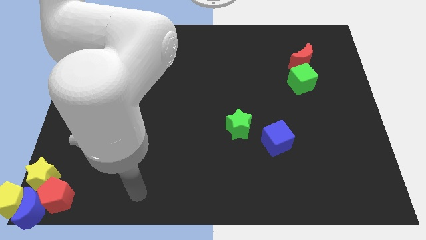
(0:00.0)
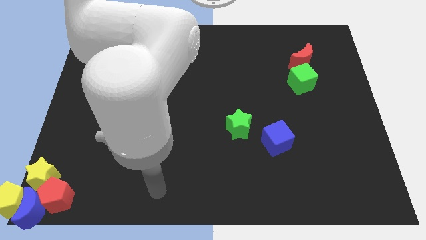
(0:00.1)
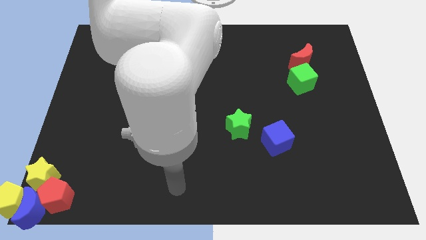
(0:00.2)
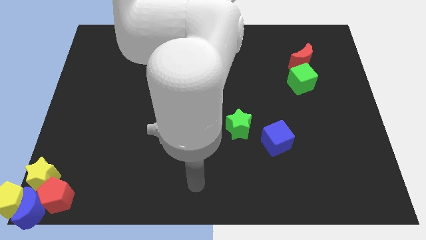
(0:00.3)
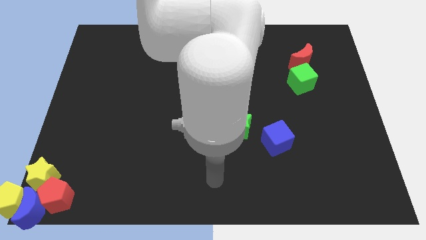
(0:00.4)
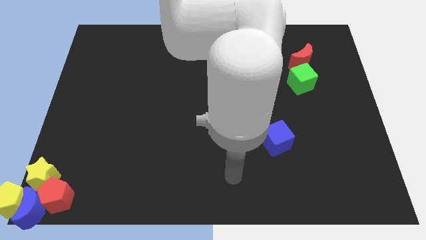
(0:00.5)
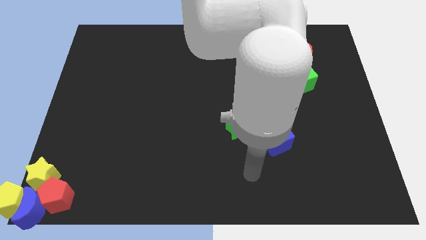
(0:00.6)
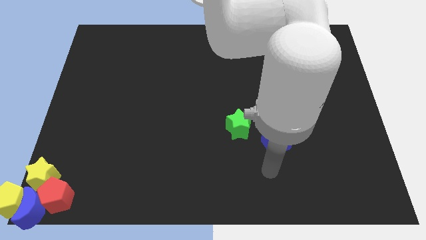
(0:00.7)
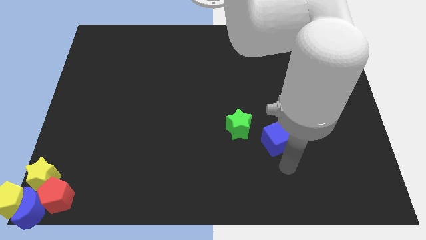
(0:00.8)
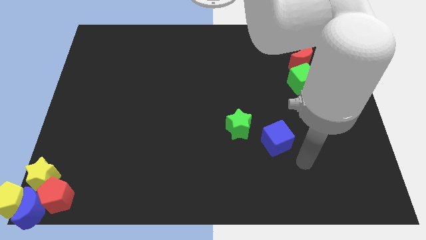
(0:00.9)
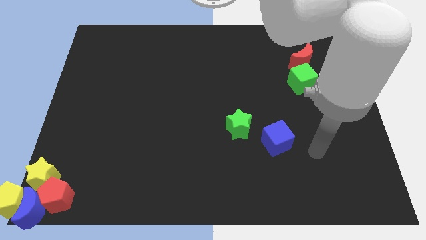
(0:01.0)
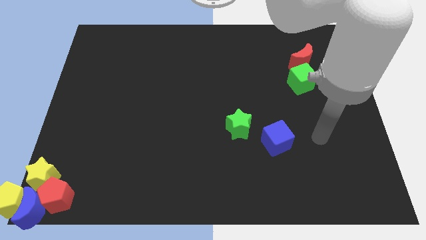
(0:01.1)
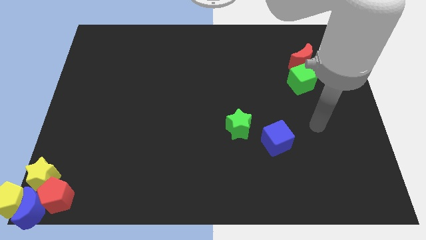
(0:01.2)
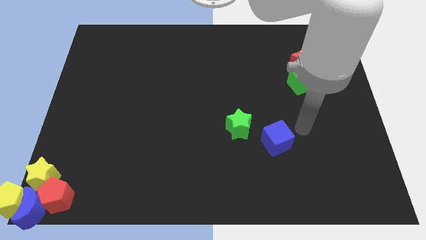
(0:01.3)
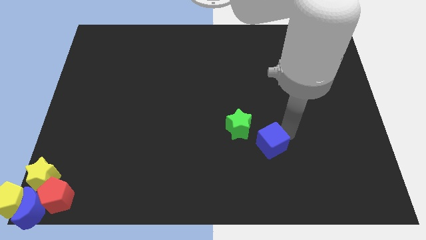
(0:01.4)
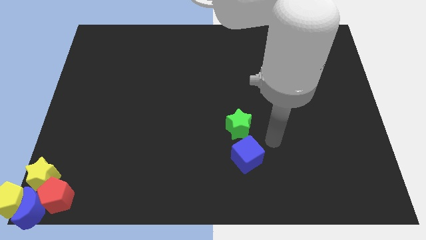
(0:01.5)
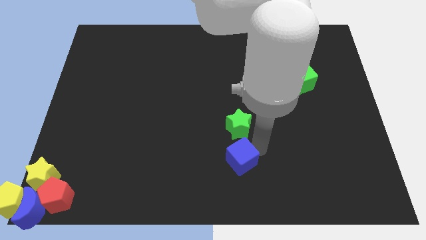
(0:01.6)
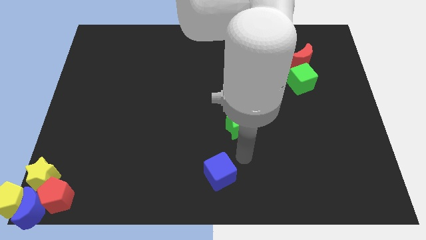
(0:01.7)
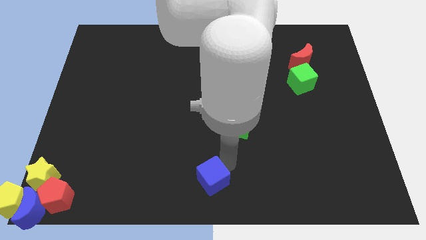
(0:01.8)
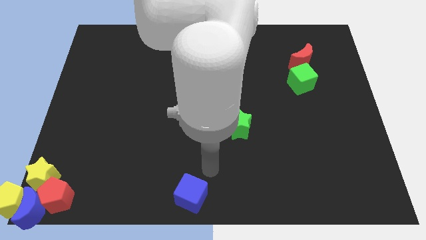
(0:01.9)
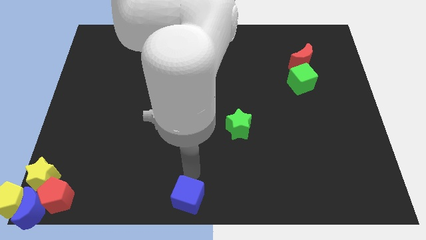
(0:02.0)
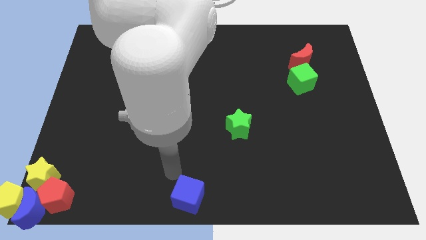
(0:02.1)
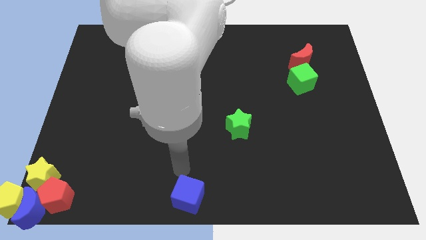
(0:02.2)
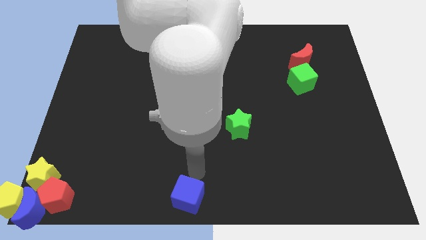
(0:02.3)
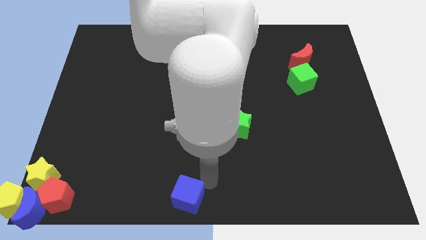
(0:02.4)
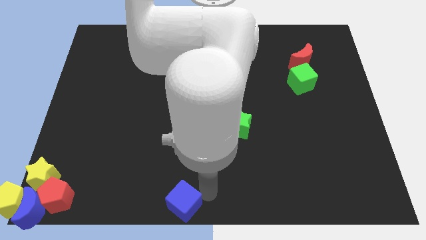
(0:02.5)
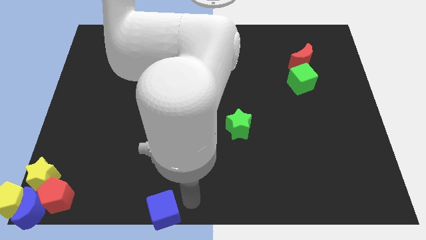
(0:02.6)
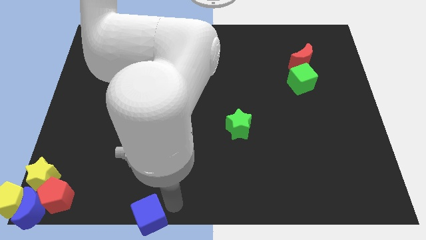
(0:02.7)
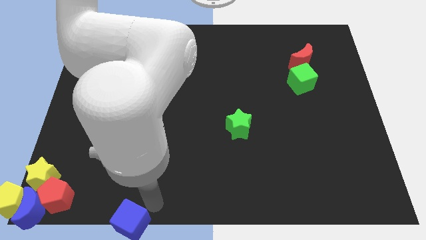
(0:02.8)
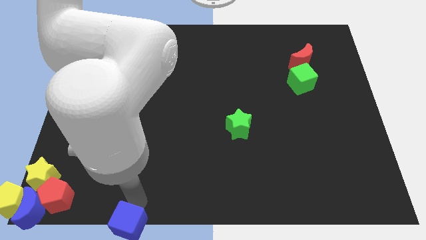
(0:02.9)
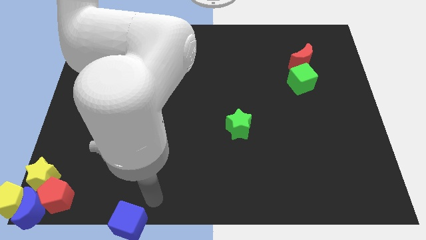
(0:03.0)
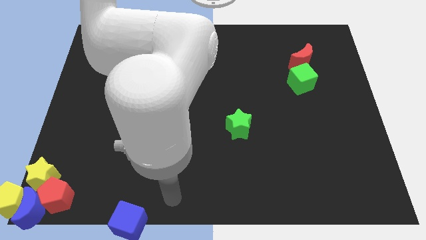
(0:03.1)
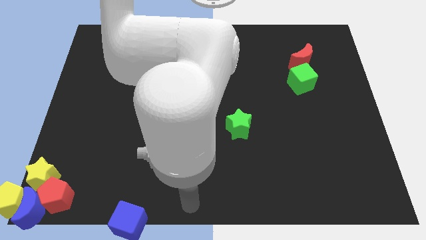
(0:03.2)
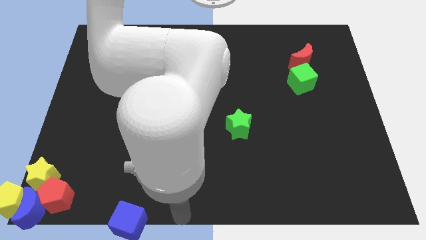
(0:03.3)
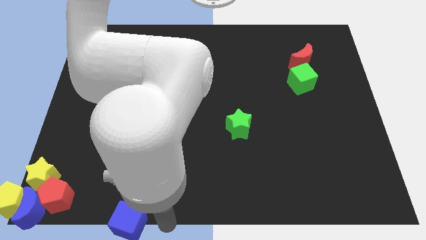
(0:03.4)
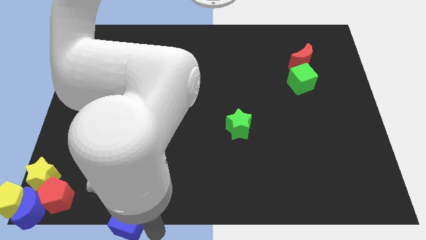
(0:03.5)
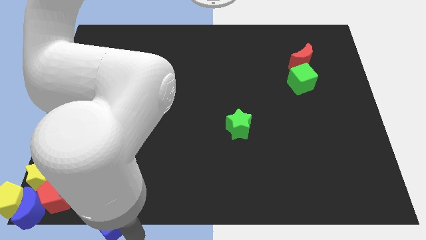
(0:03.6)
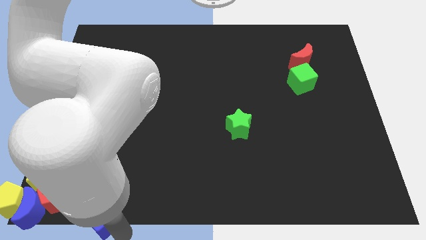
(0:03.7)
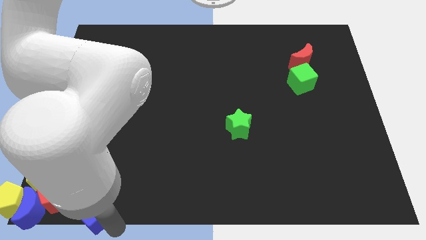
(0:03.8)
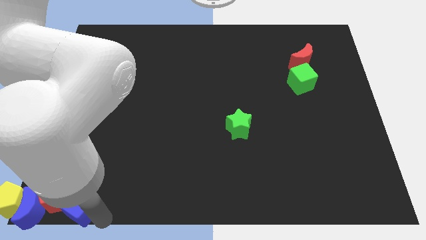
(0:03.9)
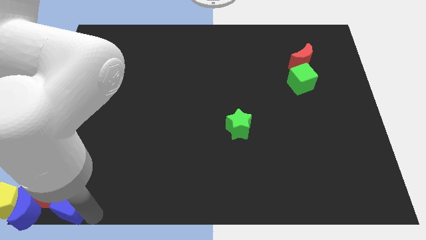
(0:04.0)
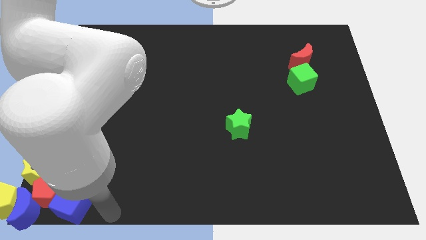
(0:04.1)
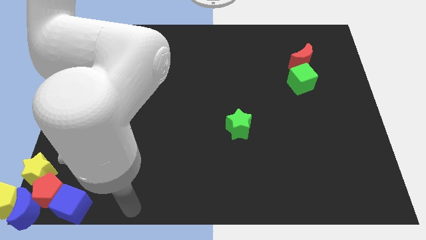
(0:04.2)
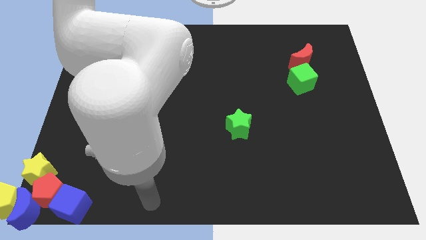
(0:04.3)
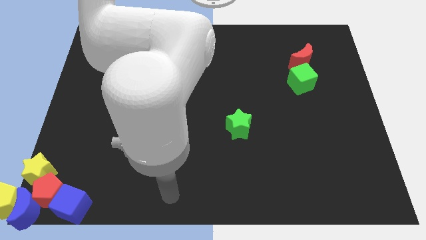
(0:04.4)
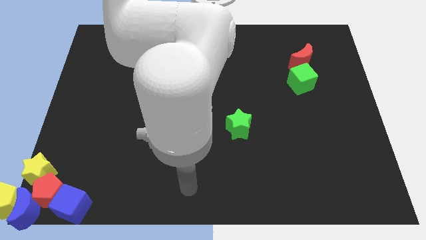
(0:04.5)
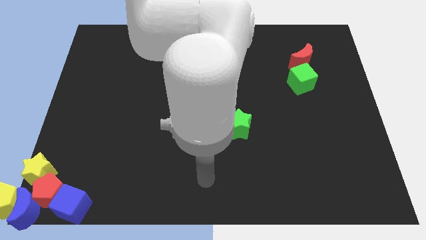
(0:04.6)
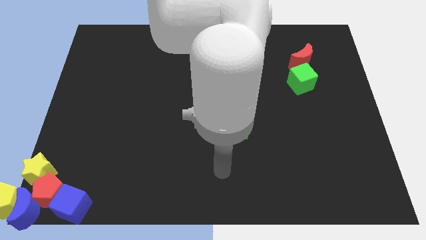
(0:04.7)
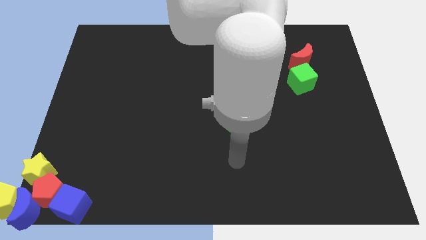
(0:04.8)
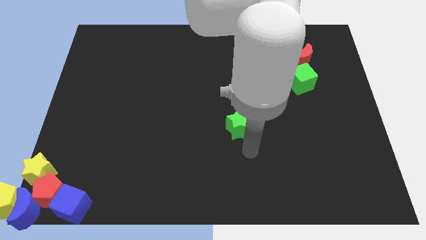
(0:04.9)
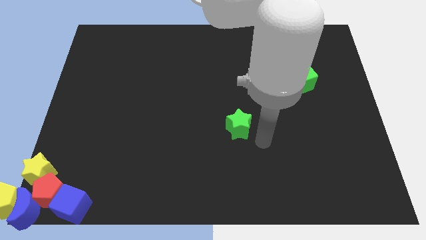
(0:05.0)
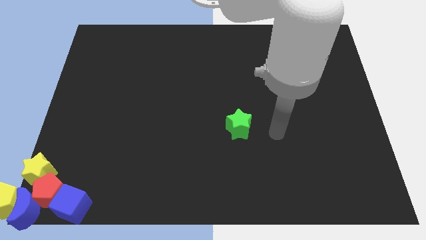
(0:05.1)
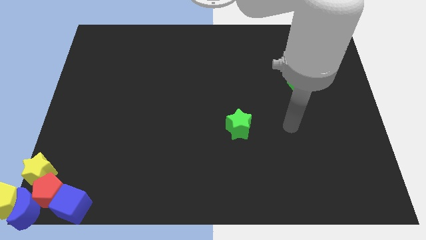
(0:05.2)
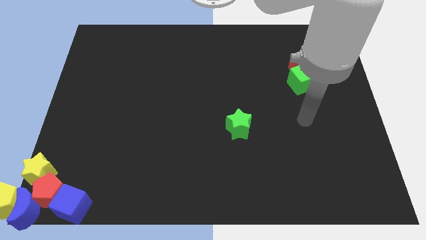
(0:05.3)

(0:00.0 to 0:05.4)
move the blue cube towards the red pentagon

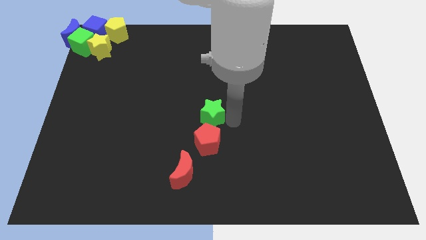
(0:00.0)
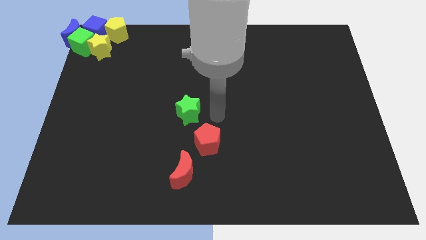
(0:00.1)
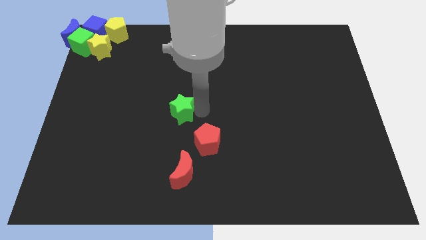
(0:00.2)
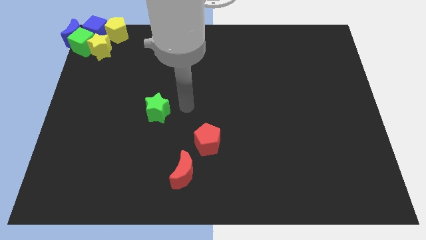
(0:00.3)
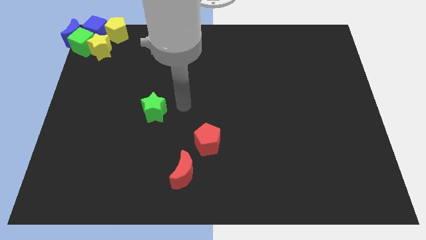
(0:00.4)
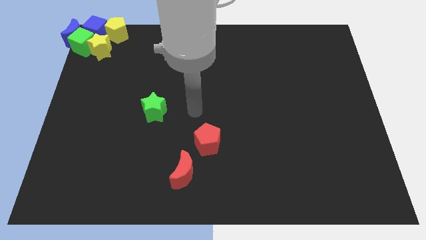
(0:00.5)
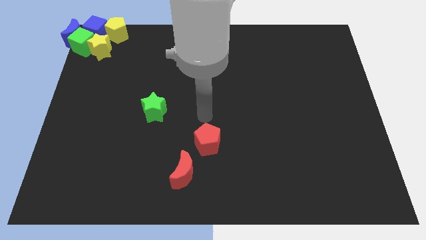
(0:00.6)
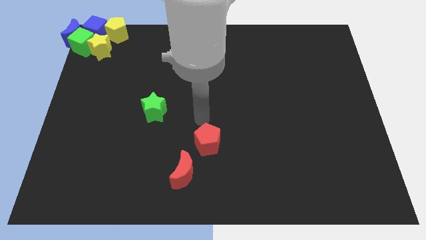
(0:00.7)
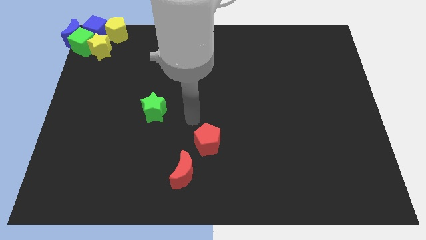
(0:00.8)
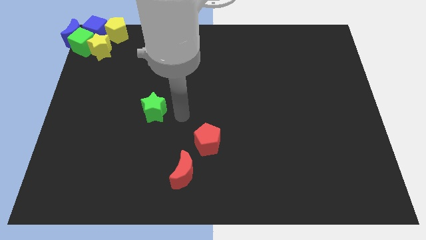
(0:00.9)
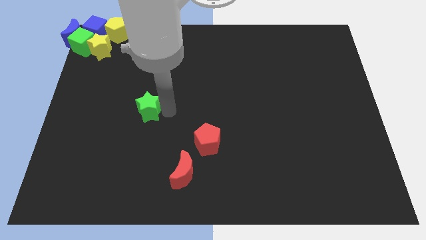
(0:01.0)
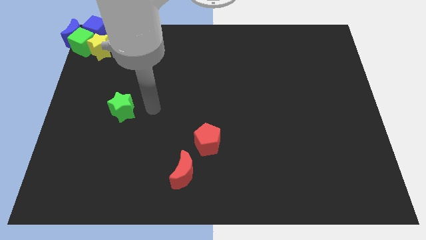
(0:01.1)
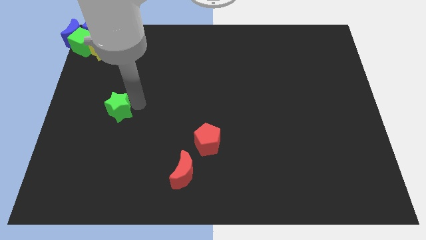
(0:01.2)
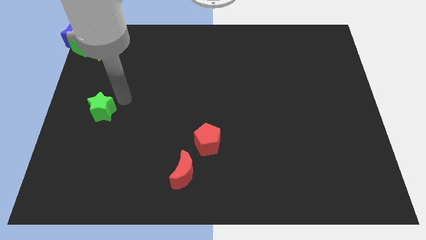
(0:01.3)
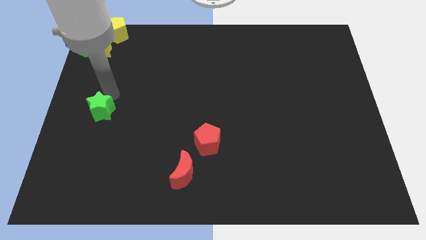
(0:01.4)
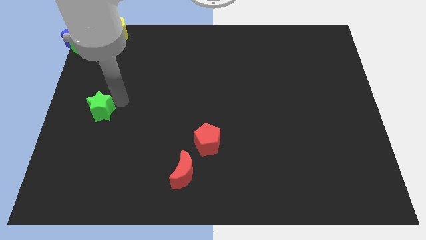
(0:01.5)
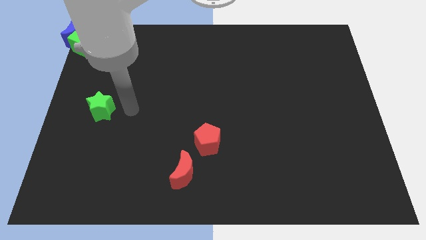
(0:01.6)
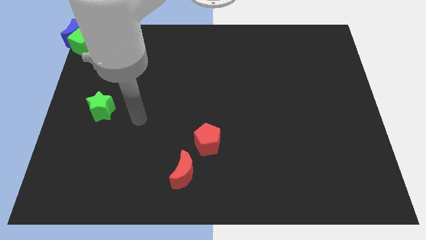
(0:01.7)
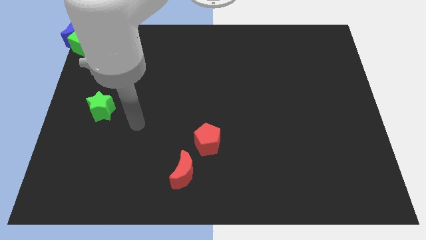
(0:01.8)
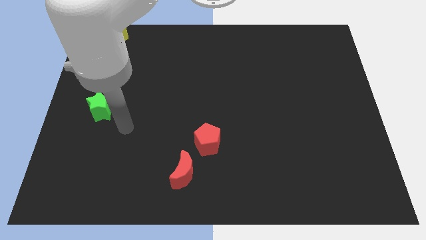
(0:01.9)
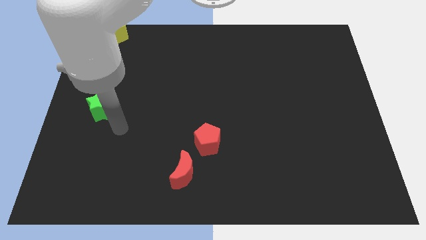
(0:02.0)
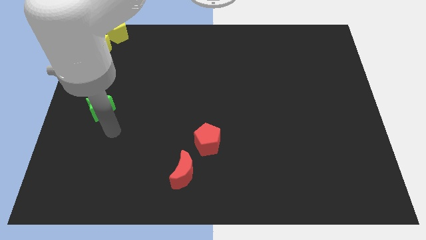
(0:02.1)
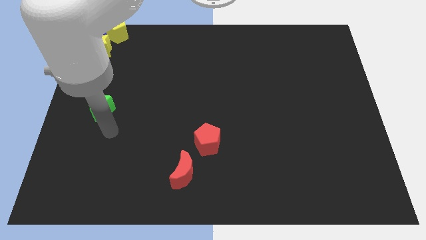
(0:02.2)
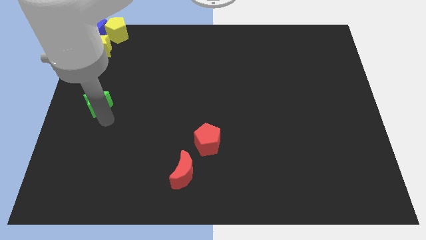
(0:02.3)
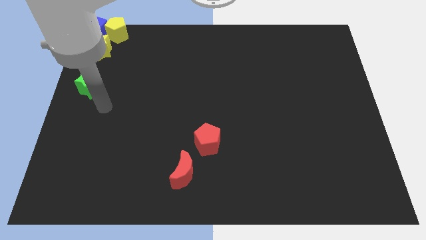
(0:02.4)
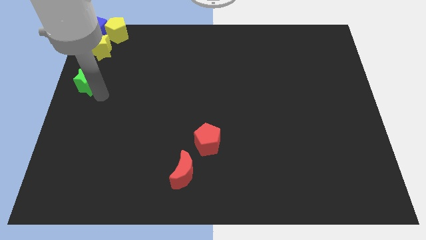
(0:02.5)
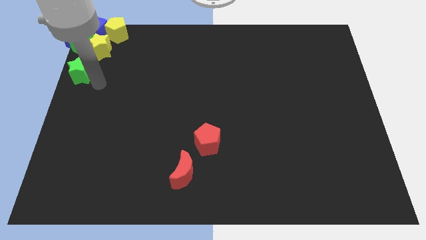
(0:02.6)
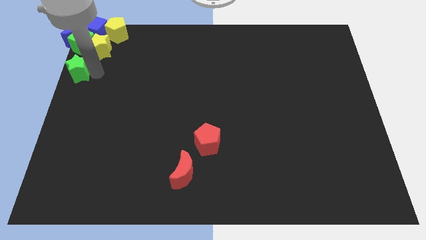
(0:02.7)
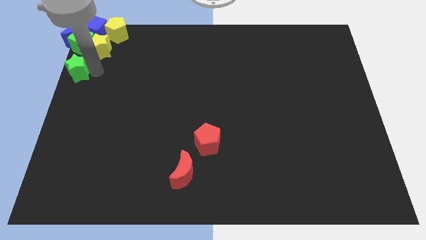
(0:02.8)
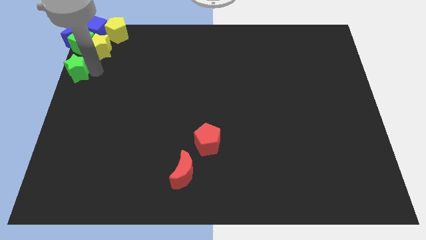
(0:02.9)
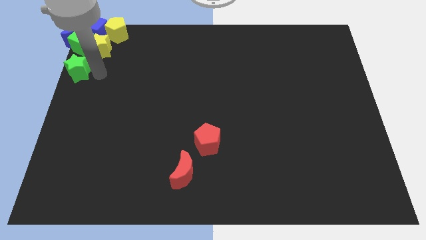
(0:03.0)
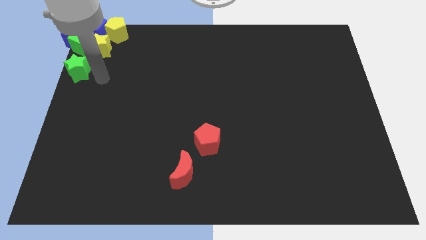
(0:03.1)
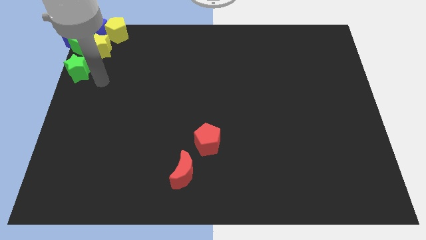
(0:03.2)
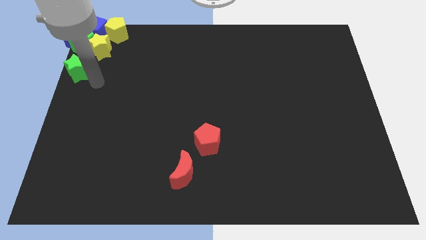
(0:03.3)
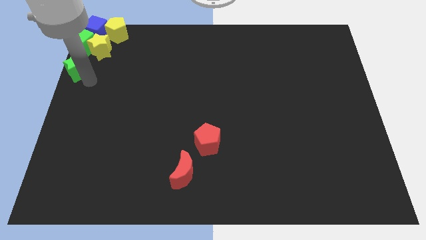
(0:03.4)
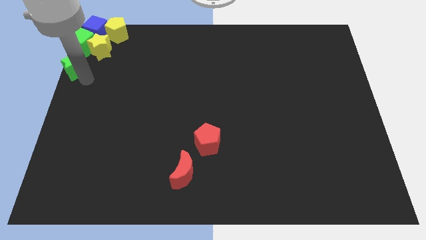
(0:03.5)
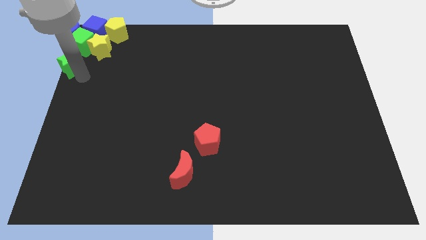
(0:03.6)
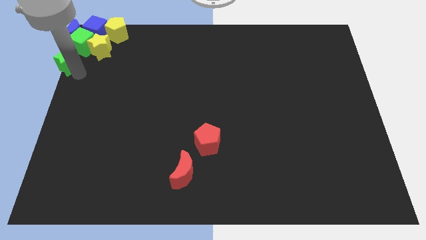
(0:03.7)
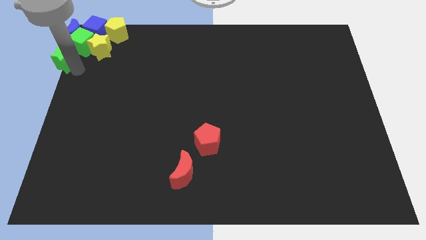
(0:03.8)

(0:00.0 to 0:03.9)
push the green star towards the group of blocks at the top left side
